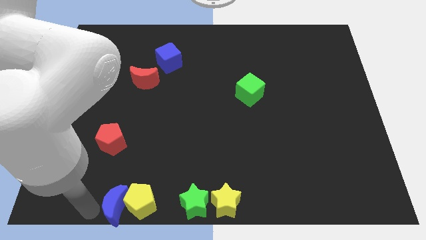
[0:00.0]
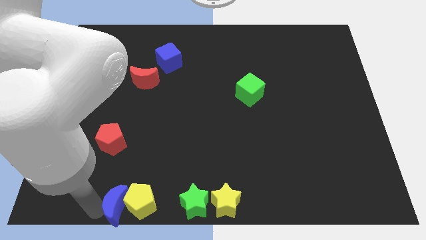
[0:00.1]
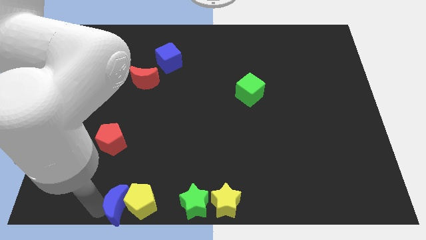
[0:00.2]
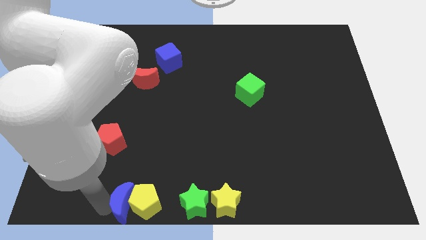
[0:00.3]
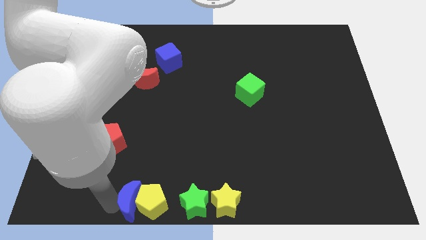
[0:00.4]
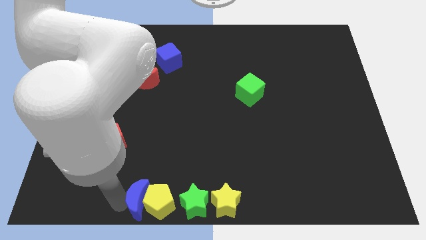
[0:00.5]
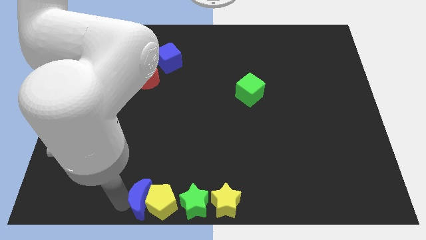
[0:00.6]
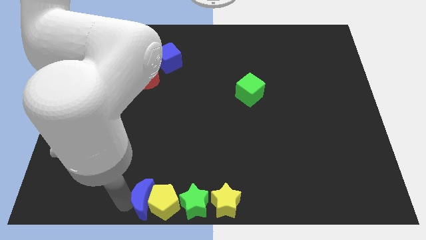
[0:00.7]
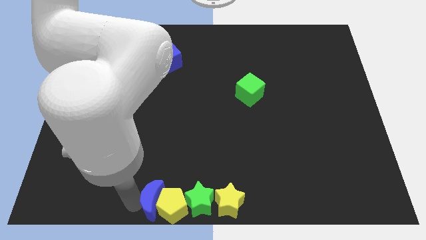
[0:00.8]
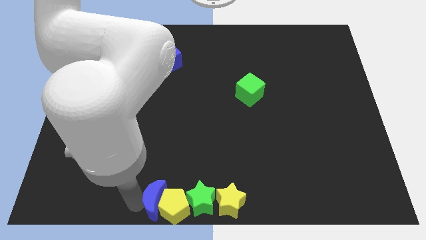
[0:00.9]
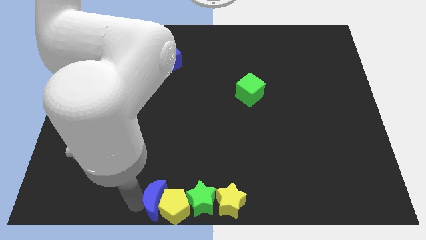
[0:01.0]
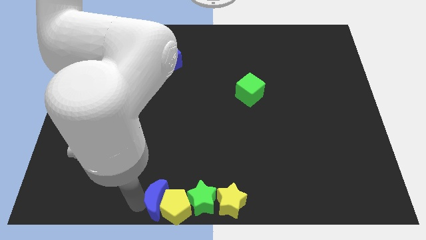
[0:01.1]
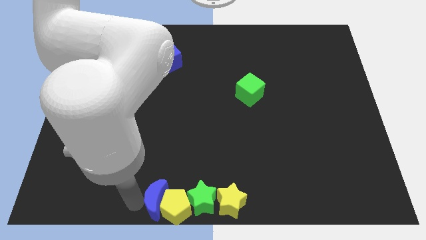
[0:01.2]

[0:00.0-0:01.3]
move the yellow pentagon and the blue moon towards the bottom center of the board

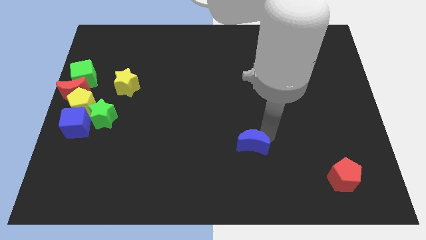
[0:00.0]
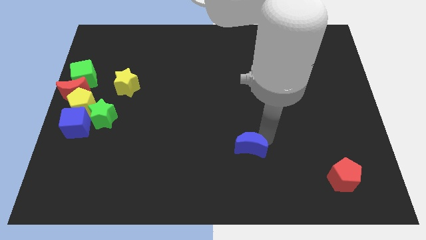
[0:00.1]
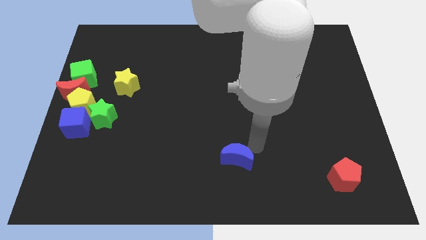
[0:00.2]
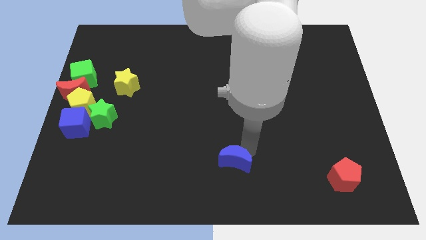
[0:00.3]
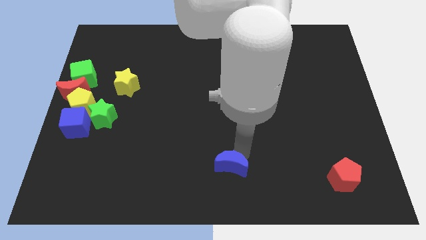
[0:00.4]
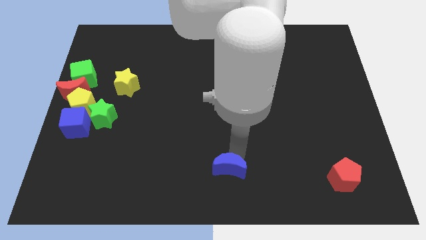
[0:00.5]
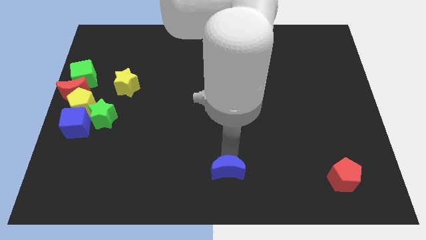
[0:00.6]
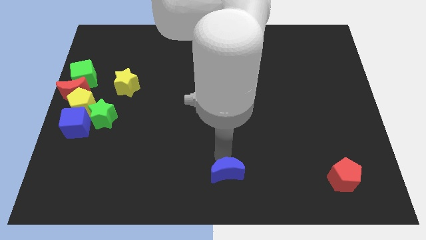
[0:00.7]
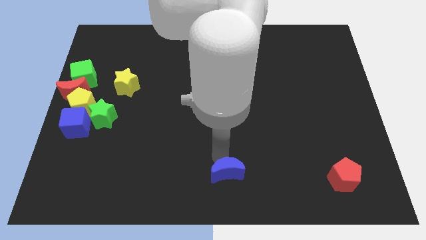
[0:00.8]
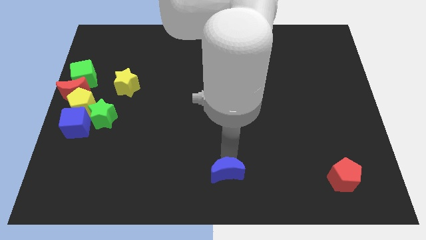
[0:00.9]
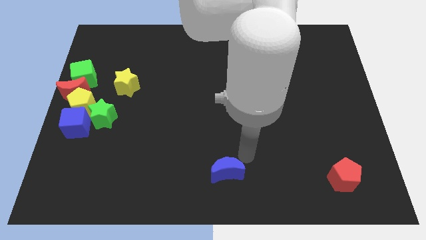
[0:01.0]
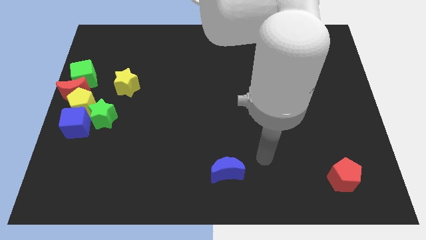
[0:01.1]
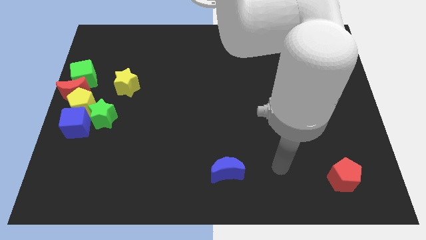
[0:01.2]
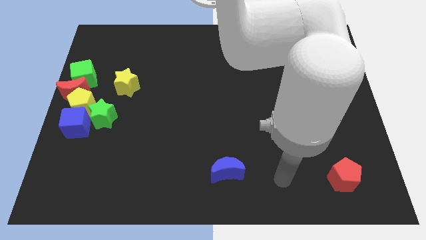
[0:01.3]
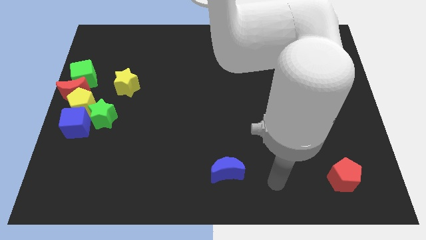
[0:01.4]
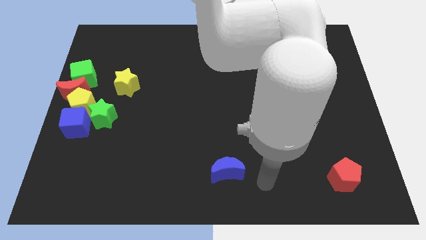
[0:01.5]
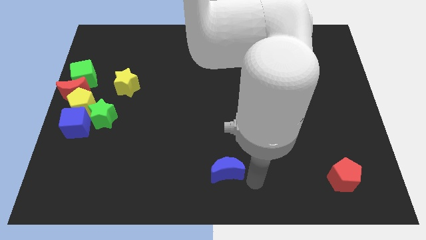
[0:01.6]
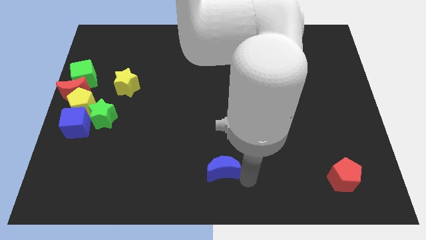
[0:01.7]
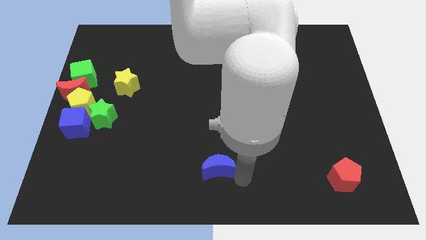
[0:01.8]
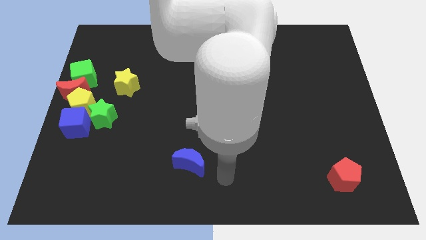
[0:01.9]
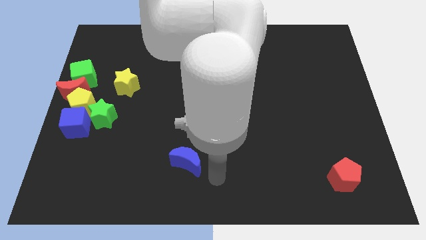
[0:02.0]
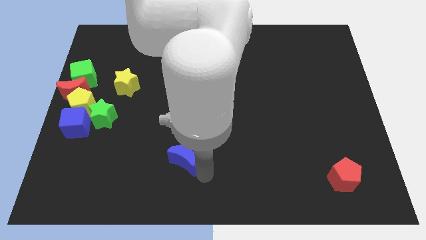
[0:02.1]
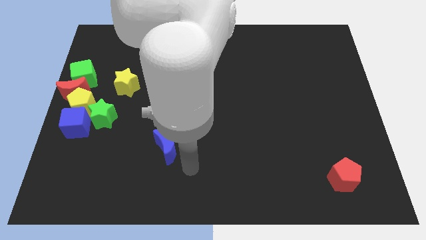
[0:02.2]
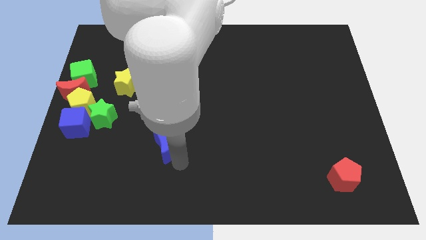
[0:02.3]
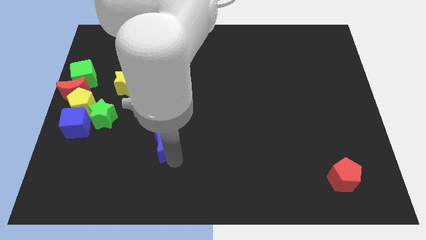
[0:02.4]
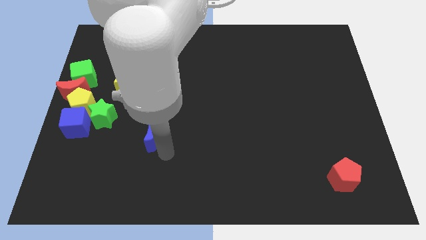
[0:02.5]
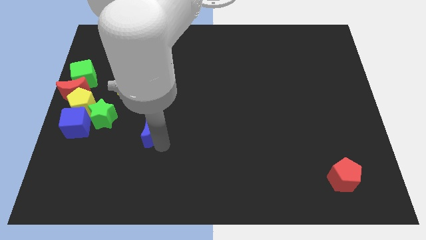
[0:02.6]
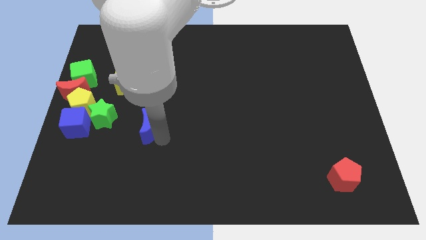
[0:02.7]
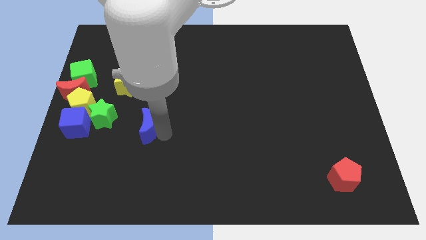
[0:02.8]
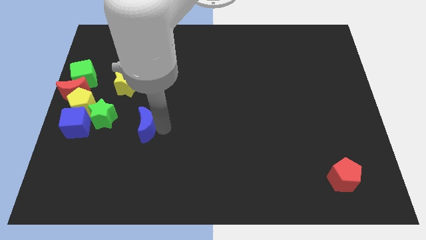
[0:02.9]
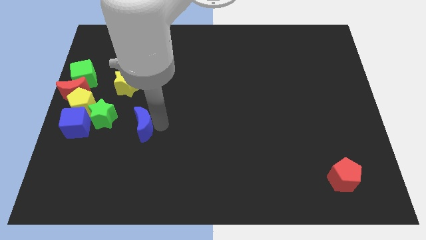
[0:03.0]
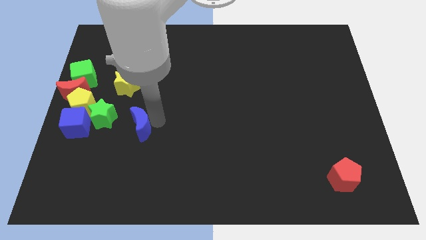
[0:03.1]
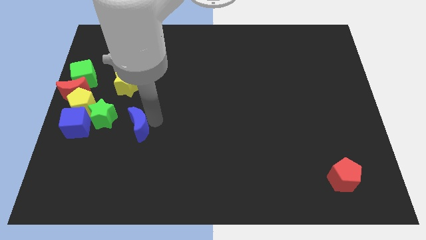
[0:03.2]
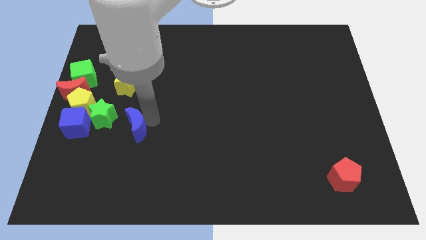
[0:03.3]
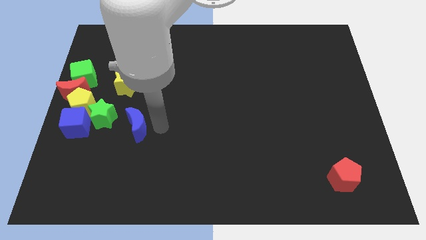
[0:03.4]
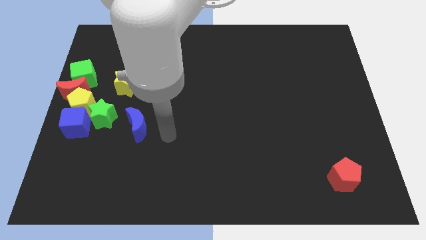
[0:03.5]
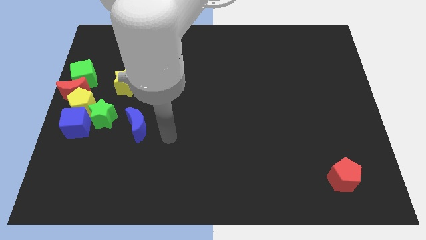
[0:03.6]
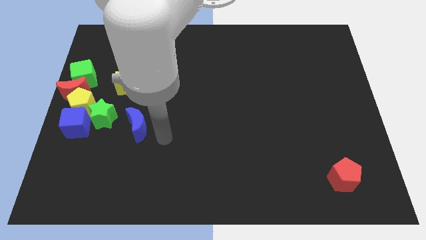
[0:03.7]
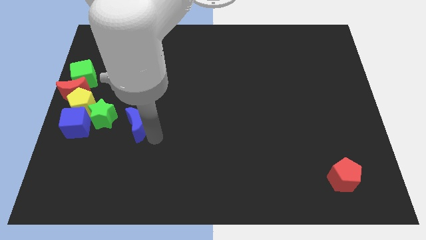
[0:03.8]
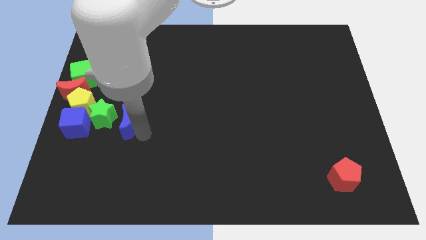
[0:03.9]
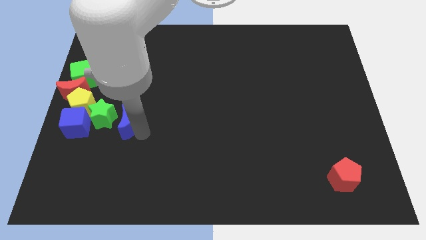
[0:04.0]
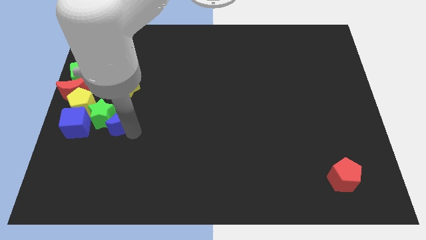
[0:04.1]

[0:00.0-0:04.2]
place blue moon to the right of green star

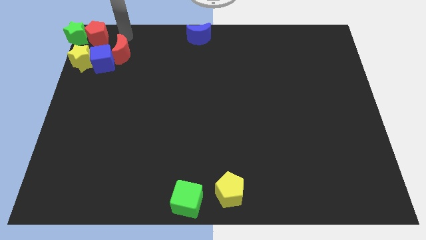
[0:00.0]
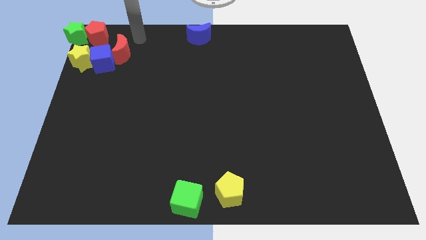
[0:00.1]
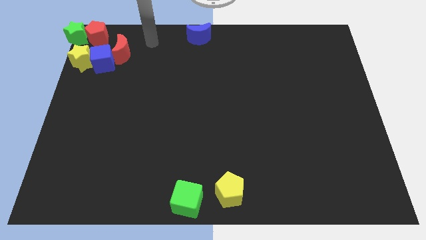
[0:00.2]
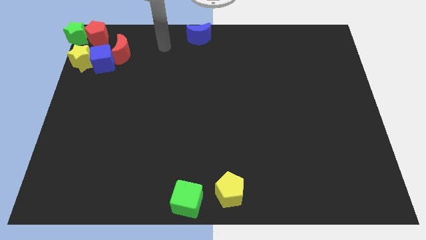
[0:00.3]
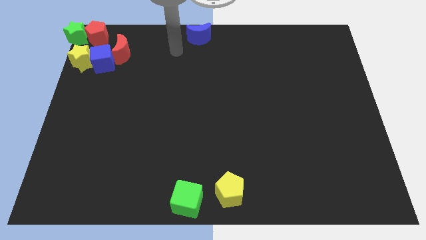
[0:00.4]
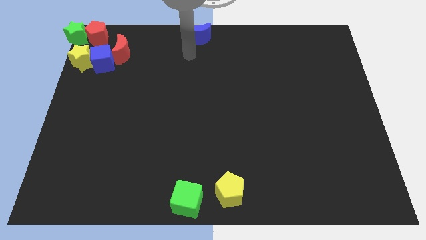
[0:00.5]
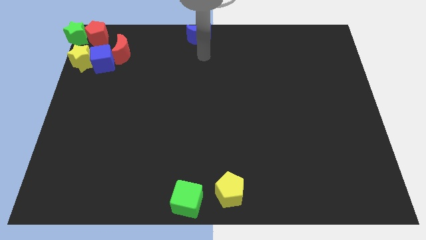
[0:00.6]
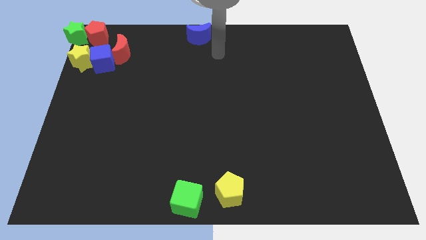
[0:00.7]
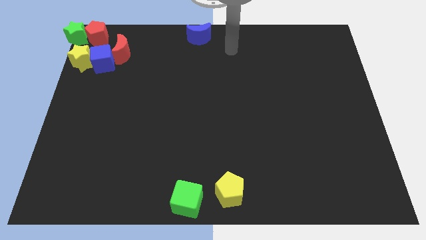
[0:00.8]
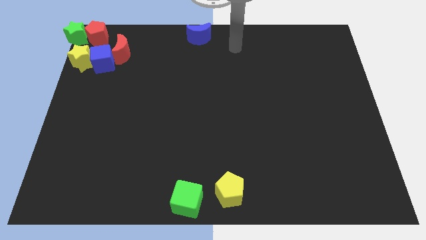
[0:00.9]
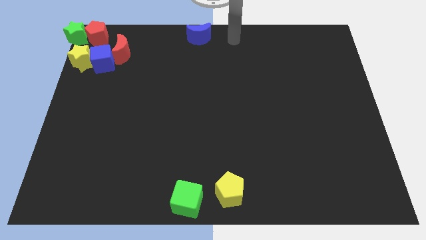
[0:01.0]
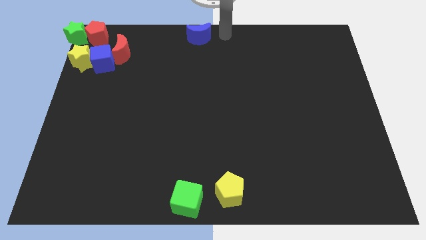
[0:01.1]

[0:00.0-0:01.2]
point your arm at the right of the blue crescent

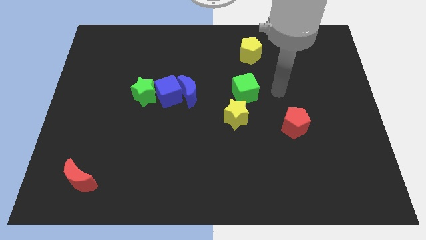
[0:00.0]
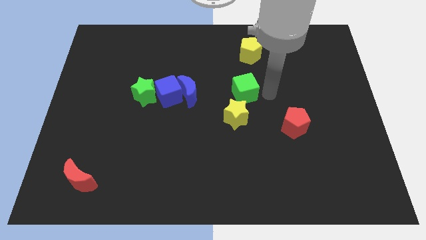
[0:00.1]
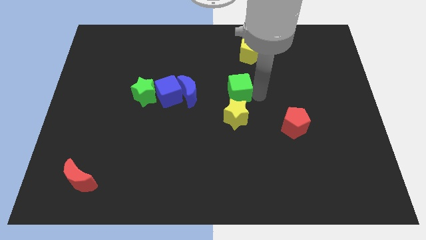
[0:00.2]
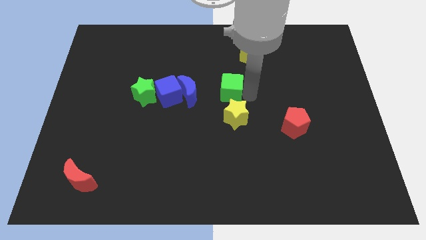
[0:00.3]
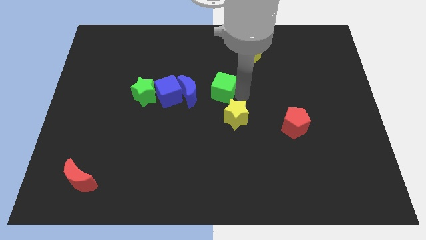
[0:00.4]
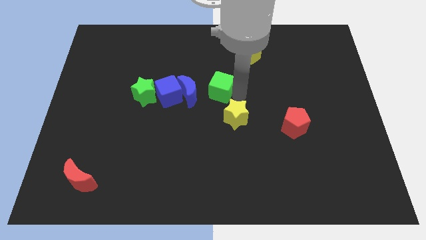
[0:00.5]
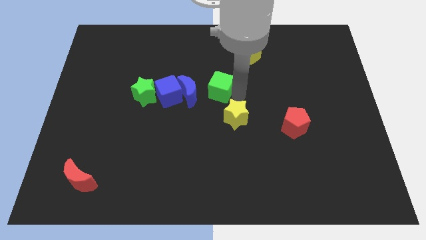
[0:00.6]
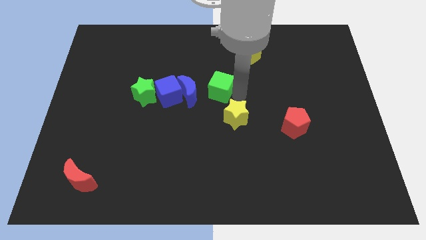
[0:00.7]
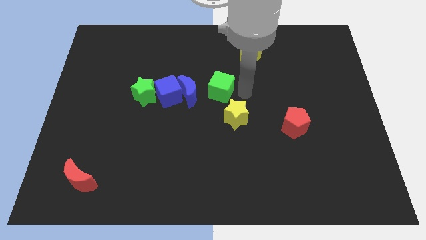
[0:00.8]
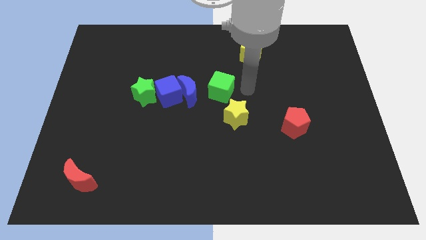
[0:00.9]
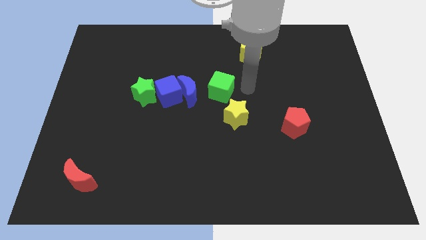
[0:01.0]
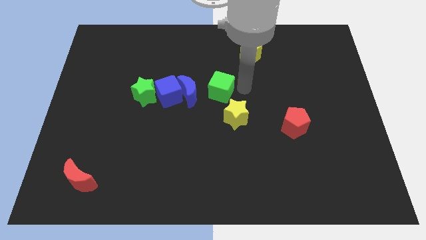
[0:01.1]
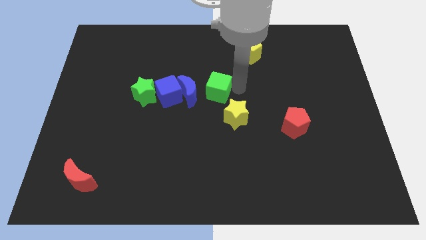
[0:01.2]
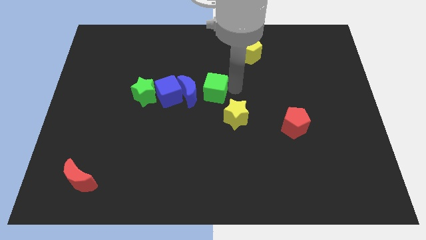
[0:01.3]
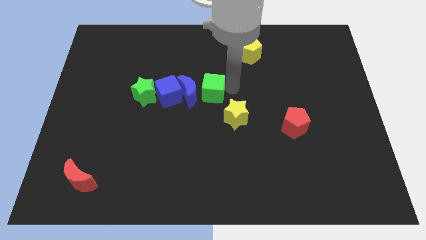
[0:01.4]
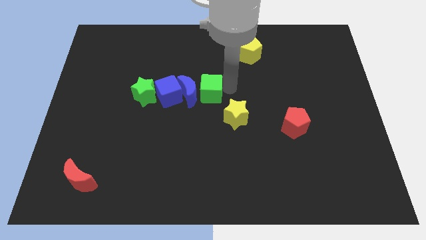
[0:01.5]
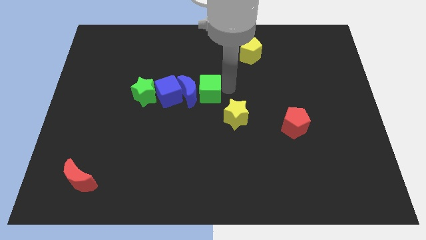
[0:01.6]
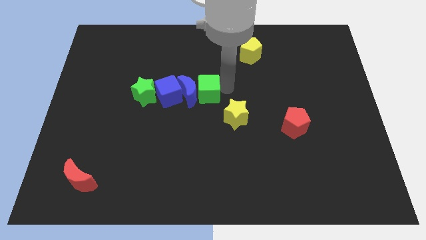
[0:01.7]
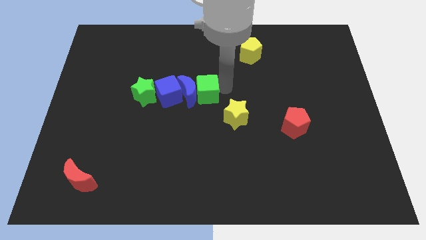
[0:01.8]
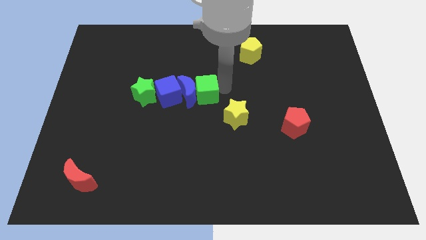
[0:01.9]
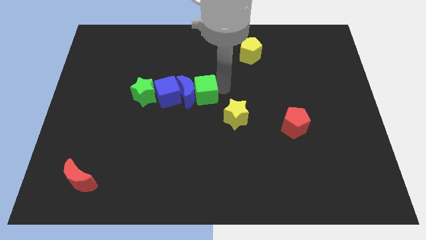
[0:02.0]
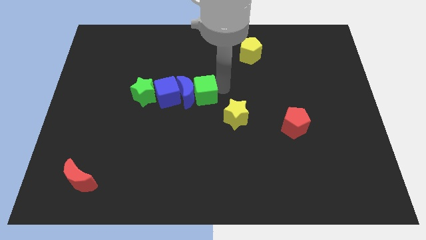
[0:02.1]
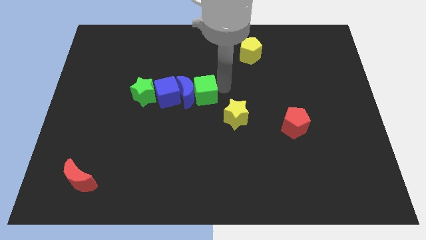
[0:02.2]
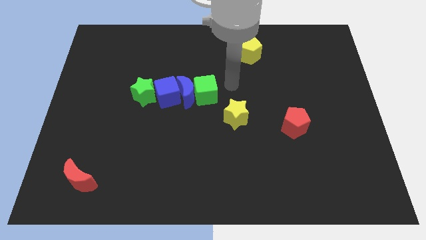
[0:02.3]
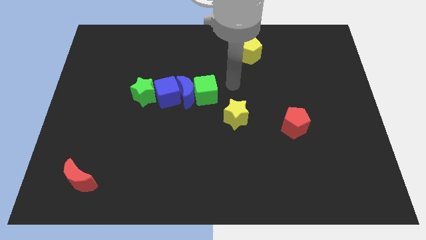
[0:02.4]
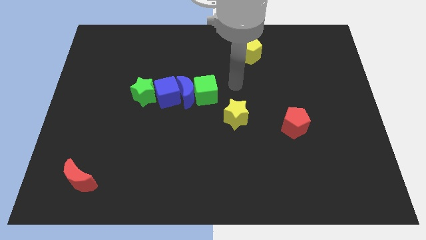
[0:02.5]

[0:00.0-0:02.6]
slide the green cube into the blue moon
